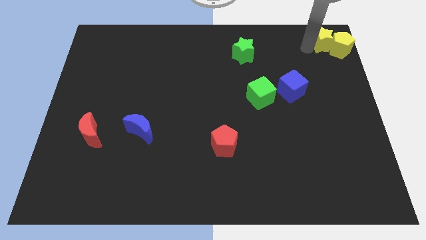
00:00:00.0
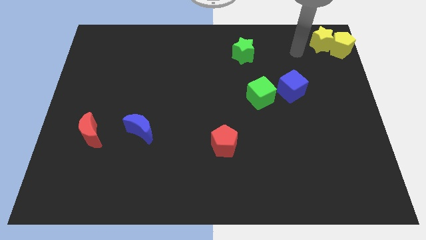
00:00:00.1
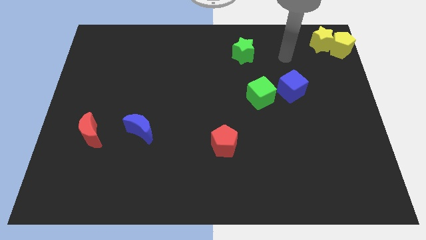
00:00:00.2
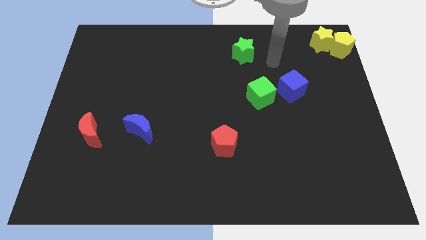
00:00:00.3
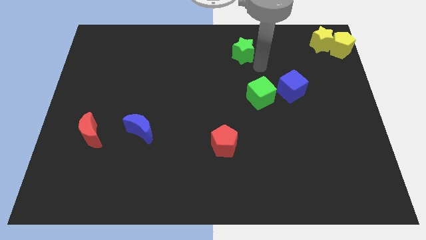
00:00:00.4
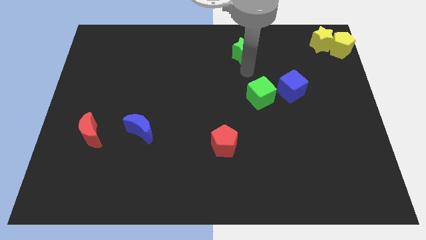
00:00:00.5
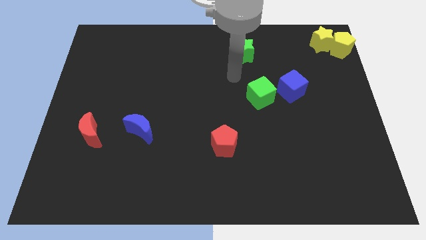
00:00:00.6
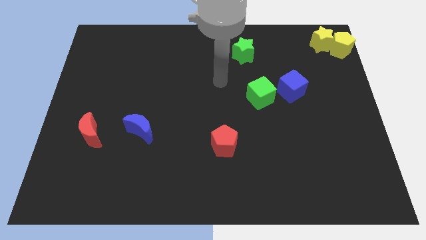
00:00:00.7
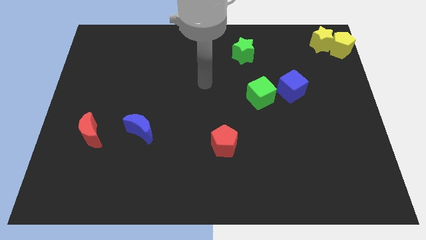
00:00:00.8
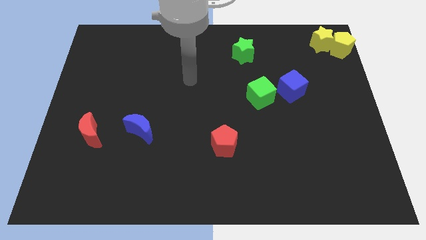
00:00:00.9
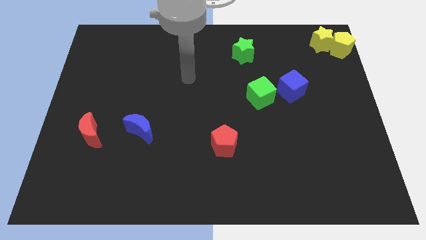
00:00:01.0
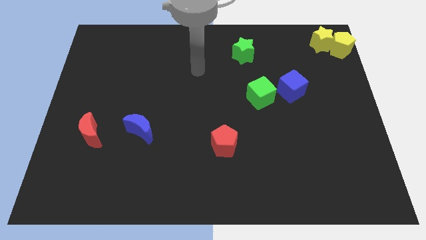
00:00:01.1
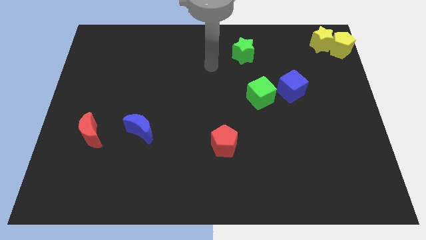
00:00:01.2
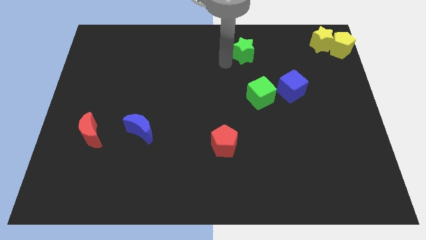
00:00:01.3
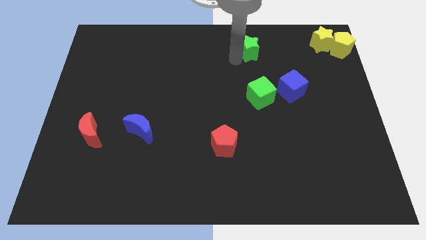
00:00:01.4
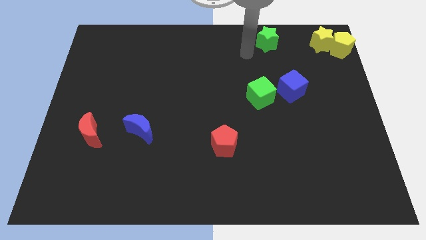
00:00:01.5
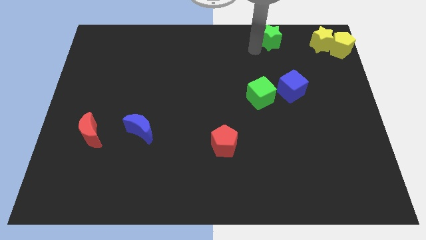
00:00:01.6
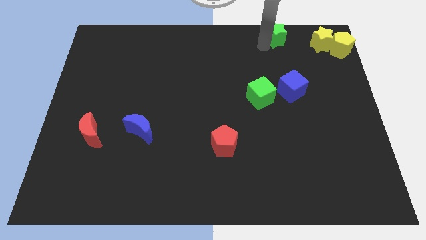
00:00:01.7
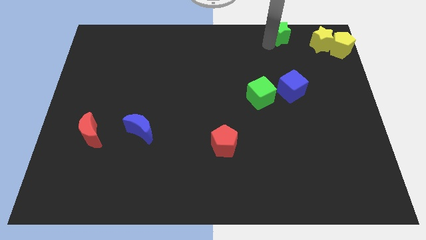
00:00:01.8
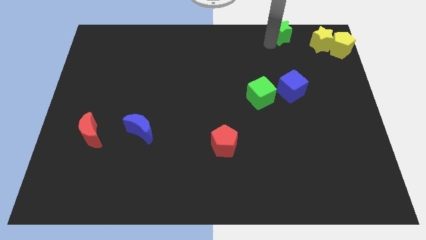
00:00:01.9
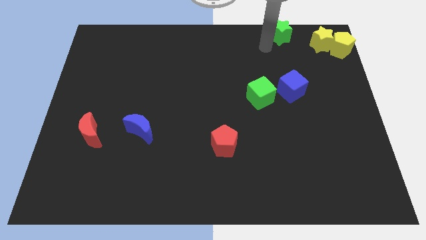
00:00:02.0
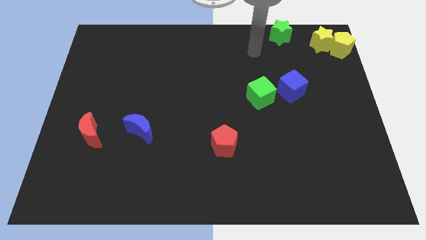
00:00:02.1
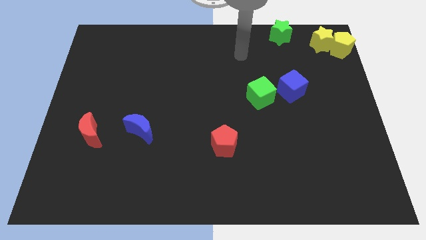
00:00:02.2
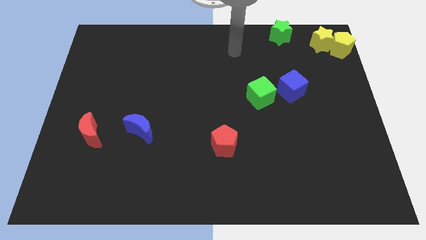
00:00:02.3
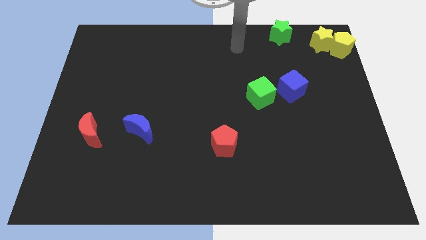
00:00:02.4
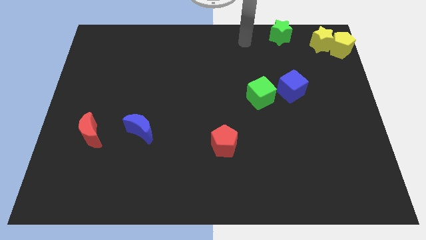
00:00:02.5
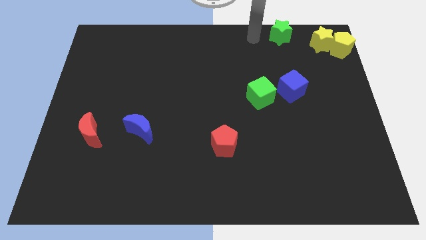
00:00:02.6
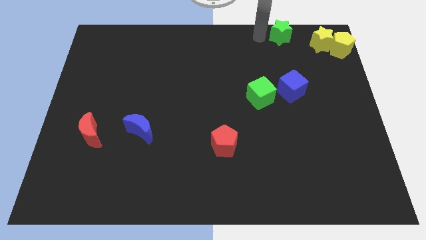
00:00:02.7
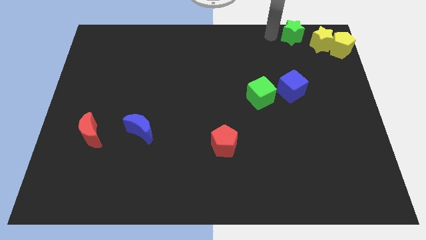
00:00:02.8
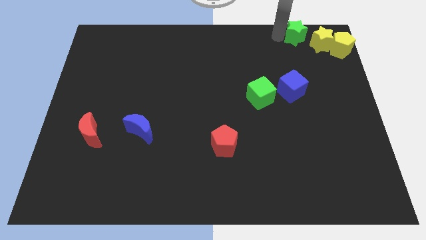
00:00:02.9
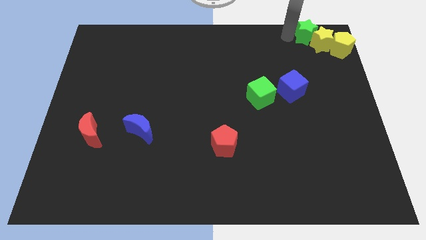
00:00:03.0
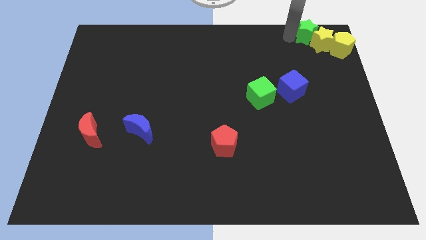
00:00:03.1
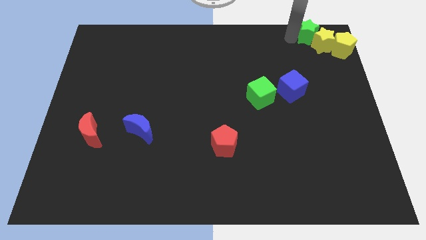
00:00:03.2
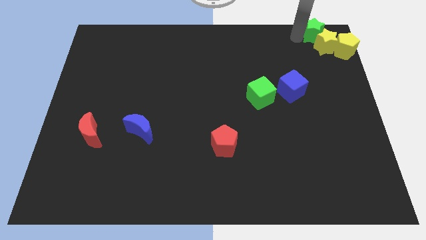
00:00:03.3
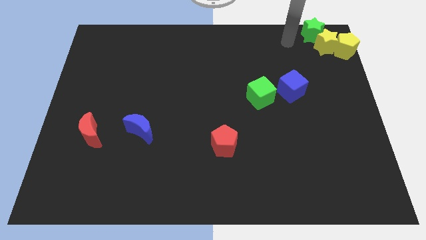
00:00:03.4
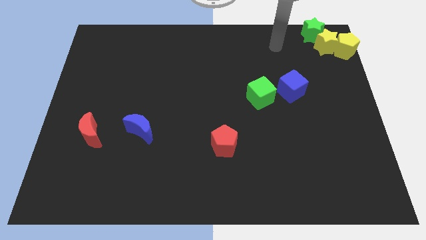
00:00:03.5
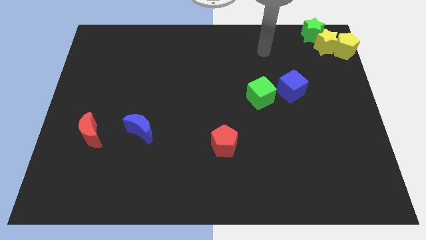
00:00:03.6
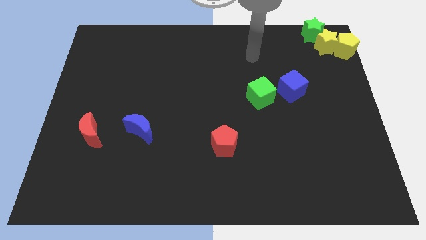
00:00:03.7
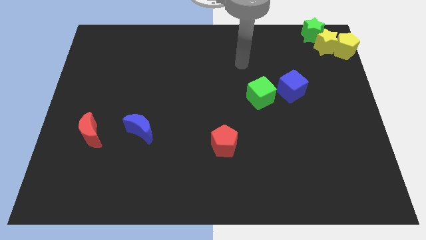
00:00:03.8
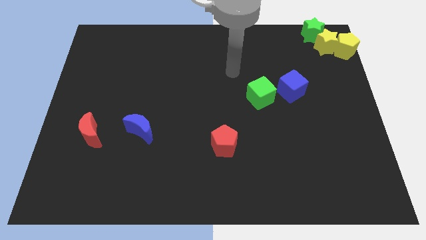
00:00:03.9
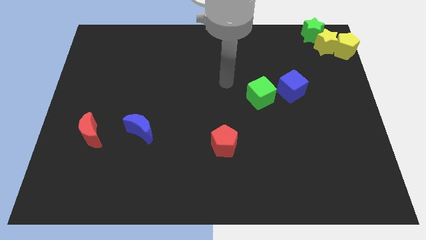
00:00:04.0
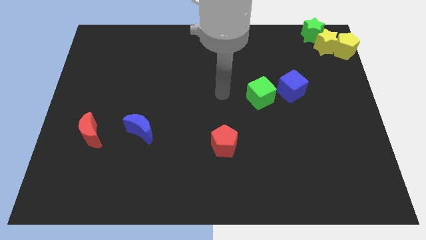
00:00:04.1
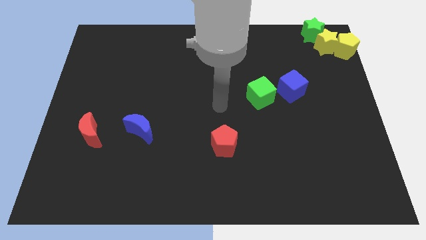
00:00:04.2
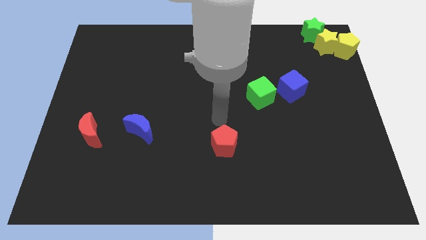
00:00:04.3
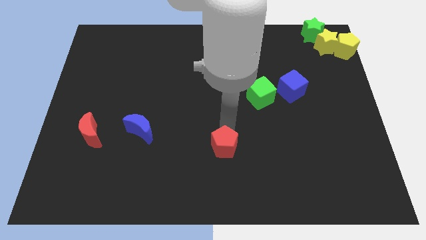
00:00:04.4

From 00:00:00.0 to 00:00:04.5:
push the green star into the yellow star

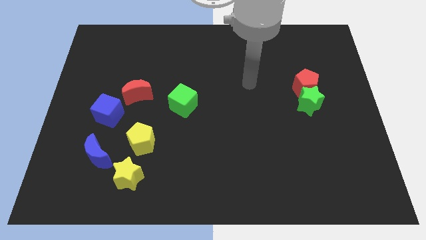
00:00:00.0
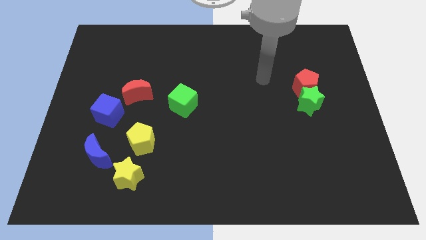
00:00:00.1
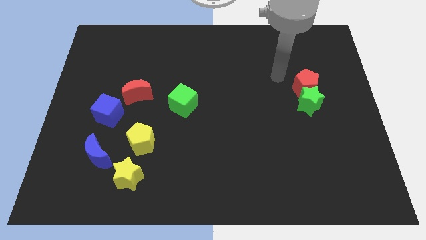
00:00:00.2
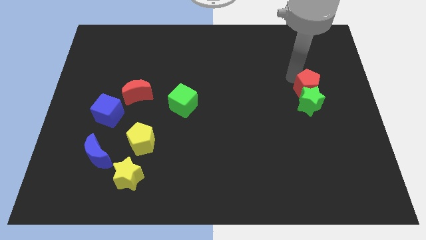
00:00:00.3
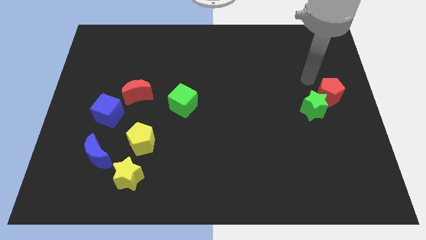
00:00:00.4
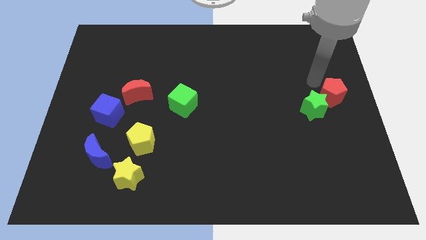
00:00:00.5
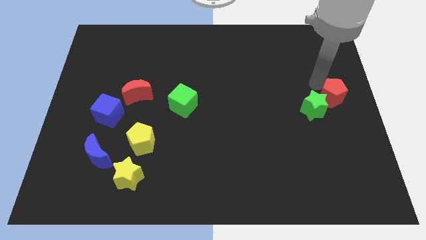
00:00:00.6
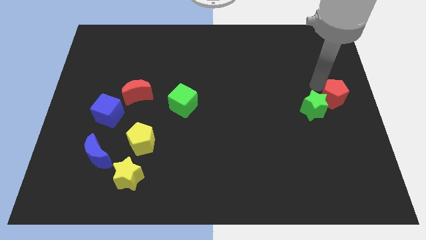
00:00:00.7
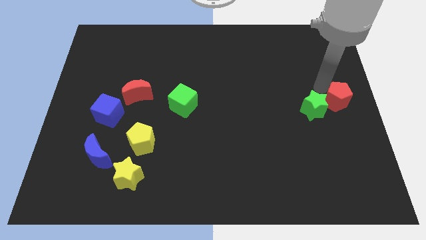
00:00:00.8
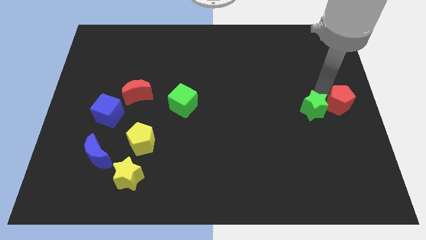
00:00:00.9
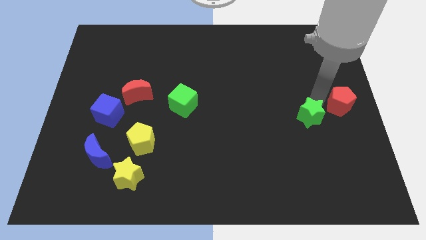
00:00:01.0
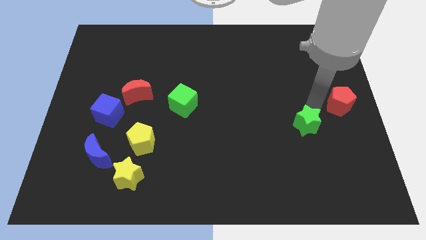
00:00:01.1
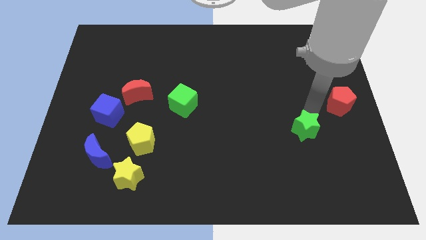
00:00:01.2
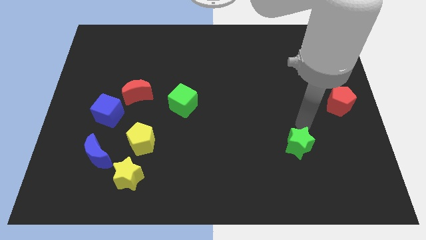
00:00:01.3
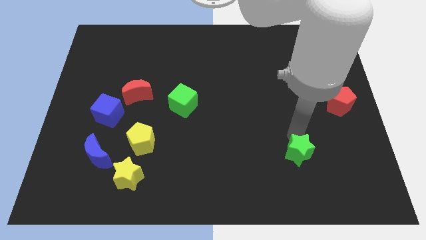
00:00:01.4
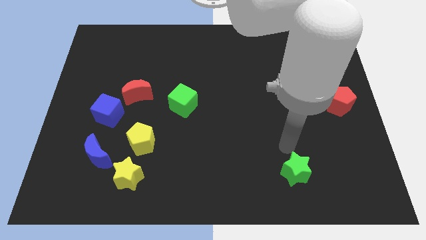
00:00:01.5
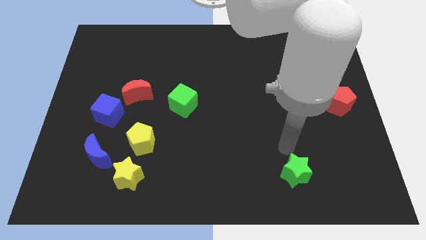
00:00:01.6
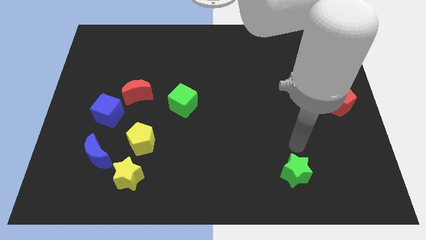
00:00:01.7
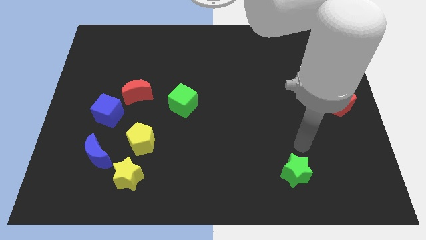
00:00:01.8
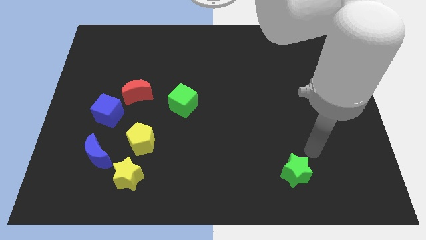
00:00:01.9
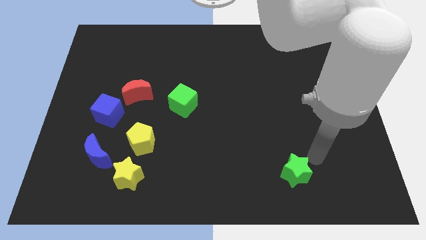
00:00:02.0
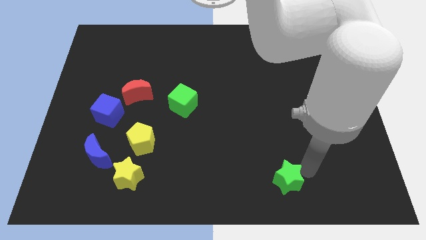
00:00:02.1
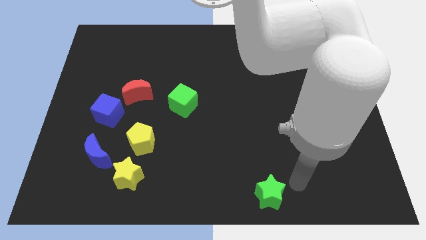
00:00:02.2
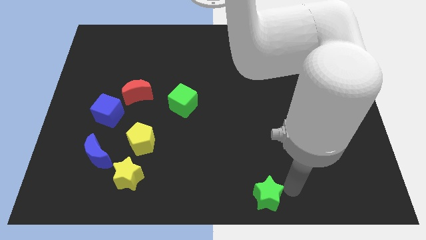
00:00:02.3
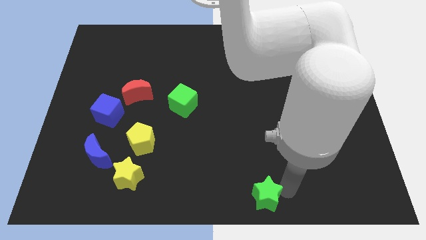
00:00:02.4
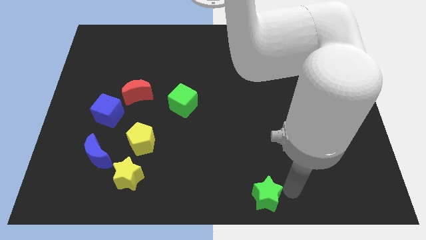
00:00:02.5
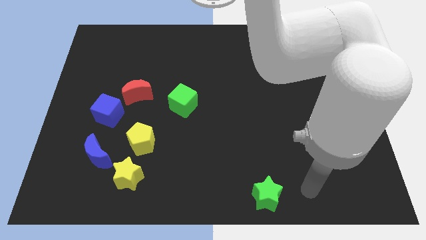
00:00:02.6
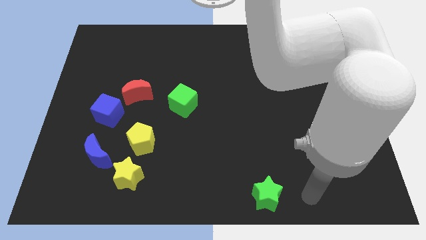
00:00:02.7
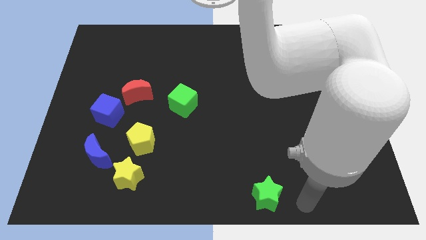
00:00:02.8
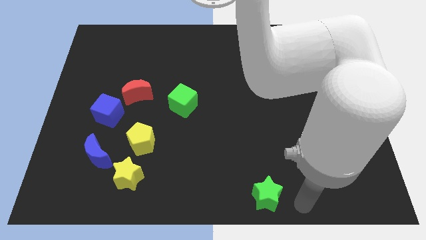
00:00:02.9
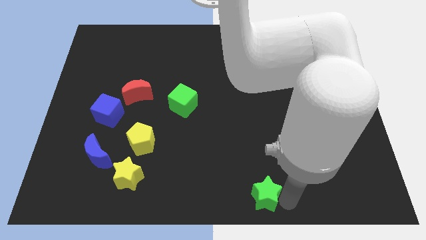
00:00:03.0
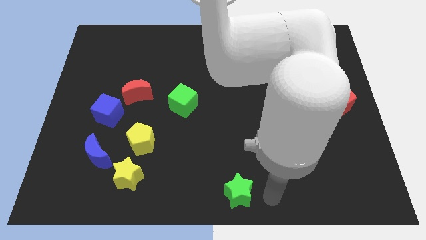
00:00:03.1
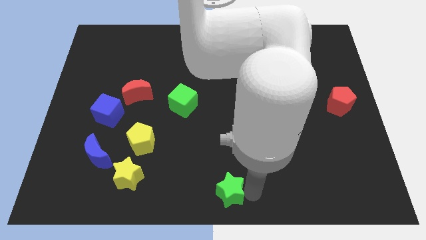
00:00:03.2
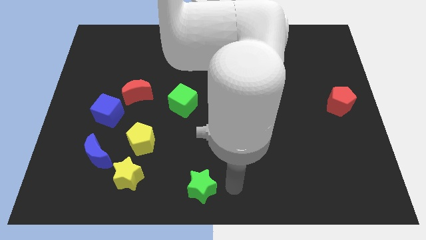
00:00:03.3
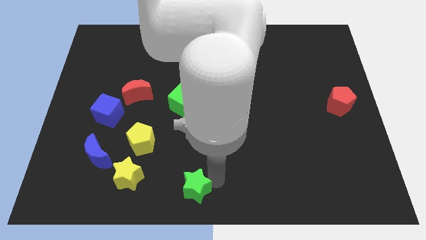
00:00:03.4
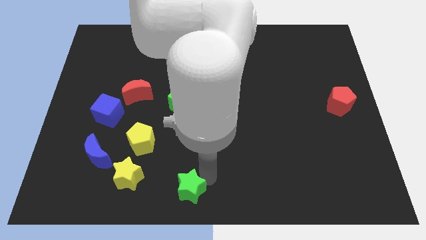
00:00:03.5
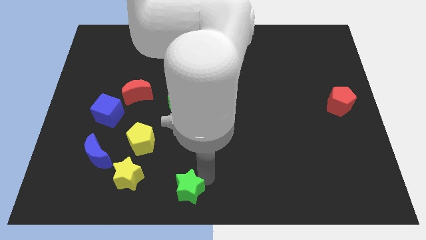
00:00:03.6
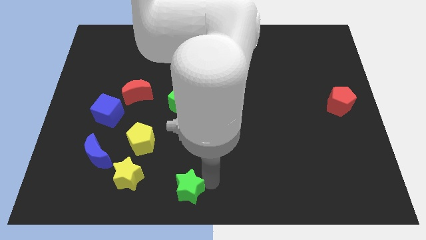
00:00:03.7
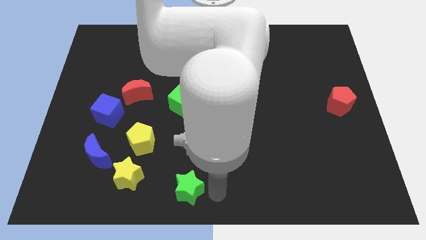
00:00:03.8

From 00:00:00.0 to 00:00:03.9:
separate the green star away from the red pentagon

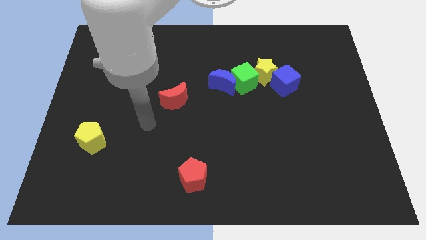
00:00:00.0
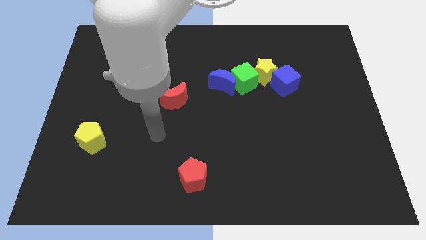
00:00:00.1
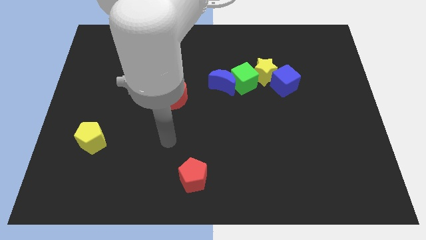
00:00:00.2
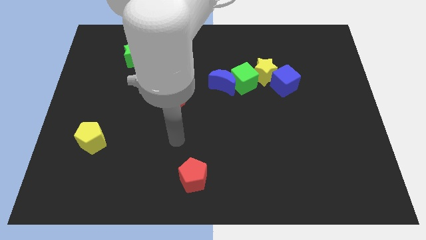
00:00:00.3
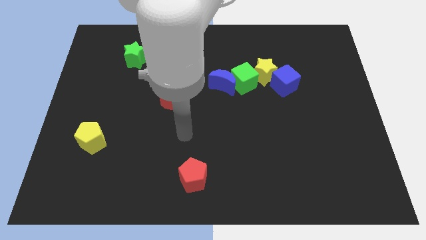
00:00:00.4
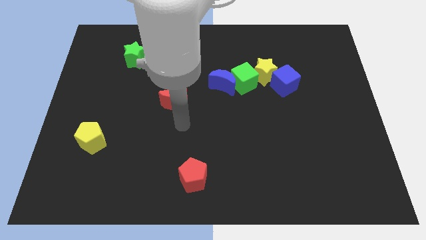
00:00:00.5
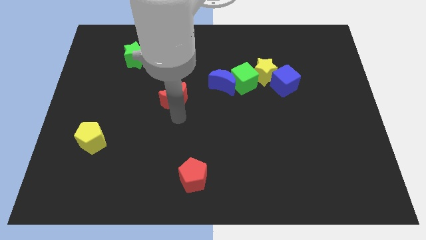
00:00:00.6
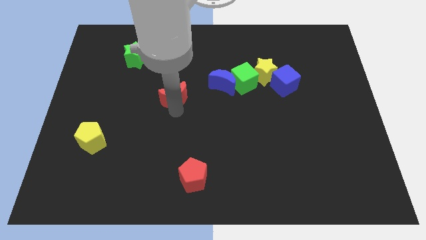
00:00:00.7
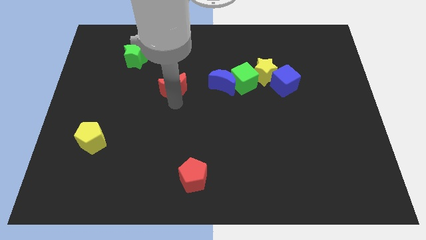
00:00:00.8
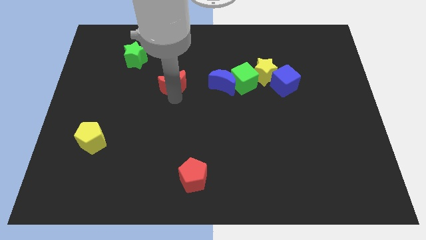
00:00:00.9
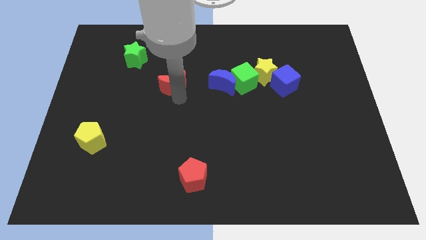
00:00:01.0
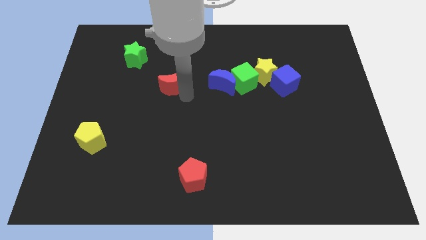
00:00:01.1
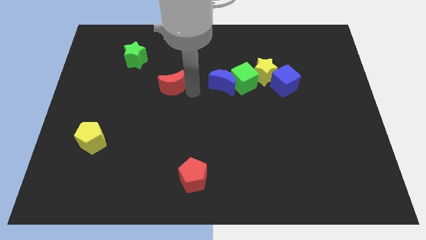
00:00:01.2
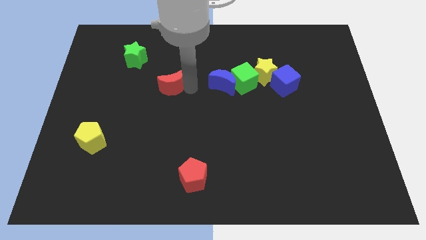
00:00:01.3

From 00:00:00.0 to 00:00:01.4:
place red moon to the left of blue moon
